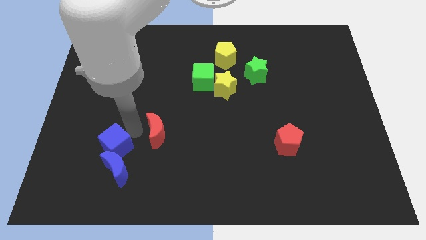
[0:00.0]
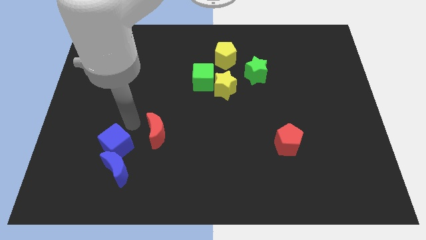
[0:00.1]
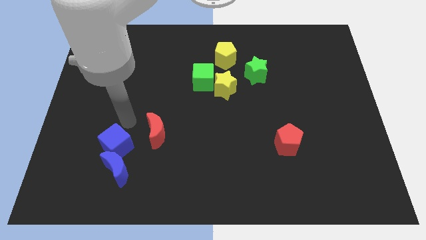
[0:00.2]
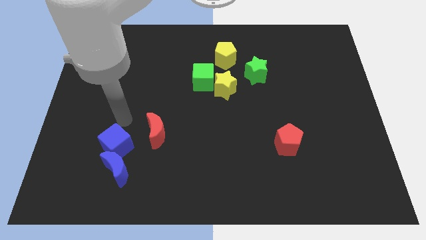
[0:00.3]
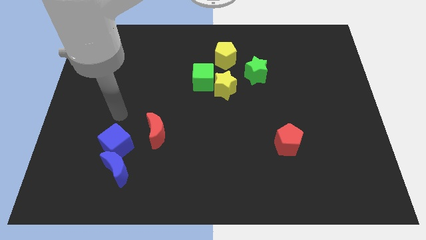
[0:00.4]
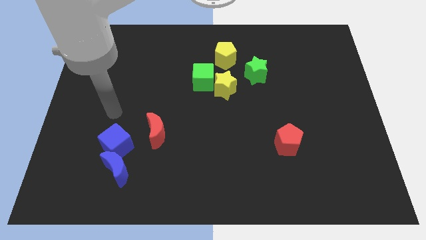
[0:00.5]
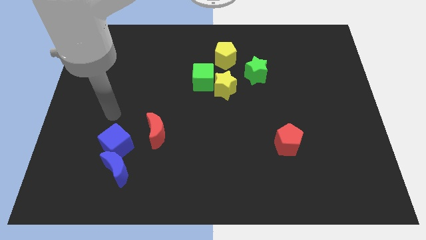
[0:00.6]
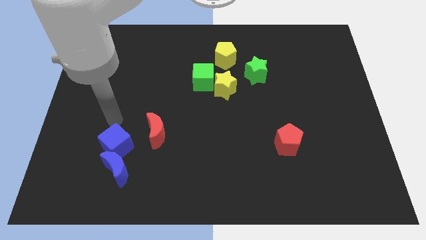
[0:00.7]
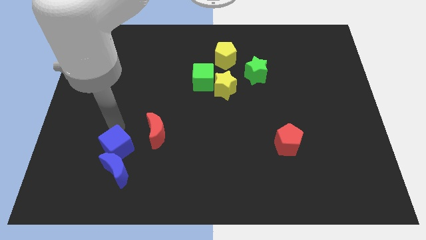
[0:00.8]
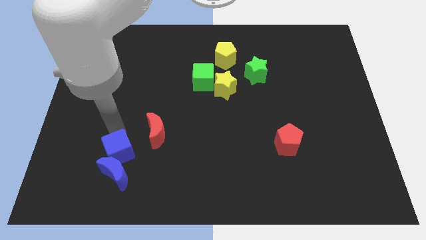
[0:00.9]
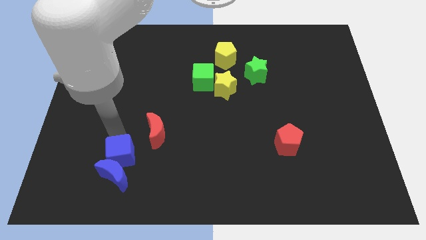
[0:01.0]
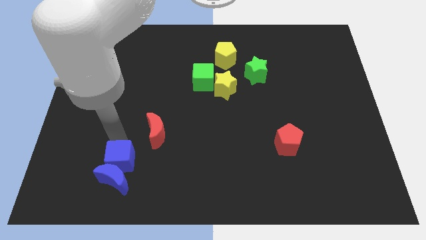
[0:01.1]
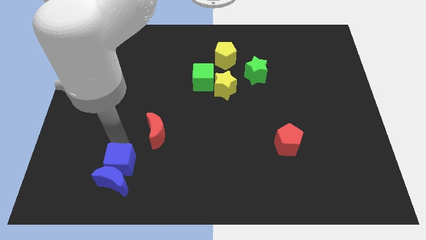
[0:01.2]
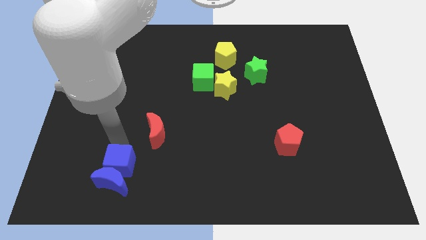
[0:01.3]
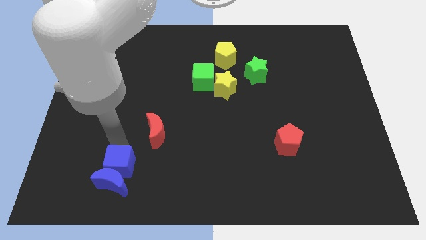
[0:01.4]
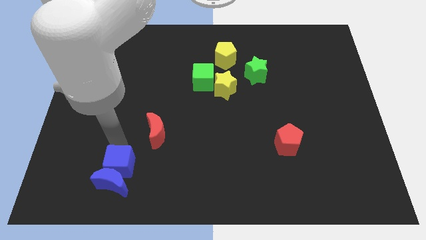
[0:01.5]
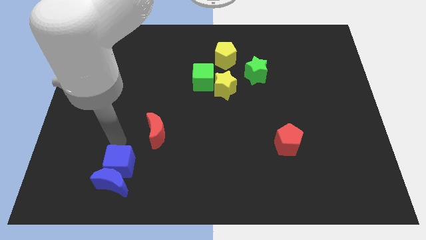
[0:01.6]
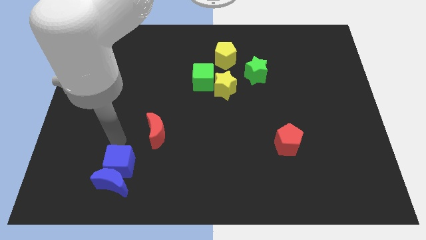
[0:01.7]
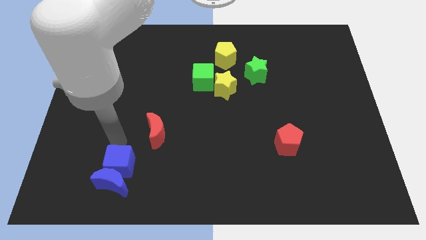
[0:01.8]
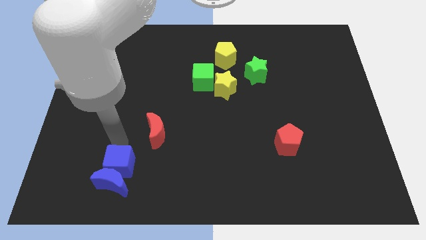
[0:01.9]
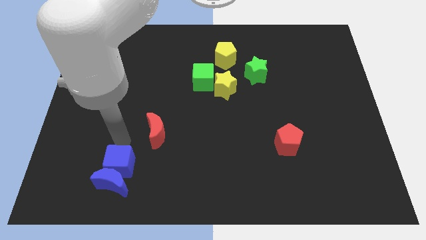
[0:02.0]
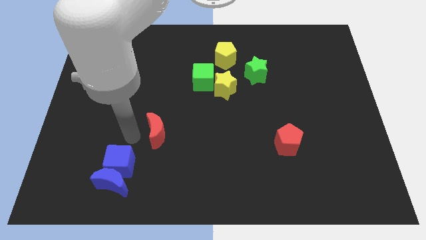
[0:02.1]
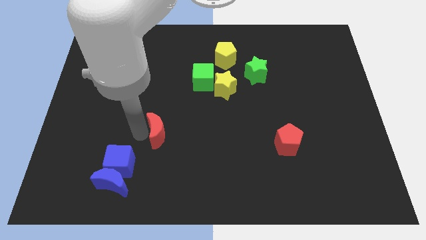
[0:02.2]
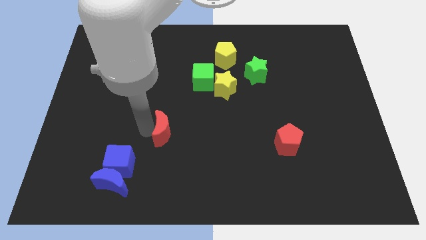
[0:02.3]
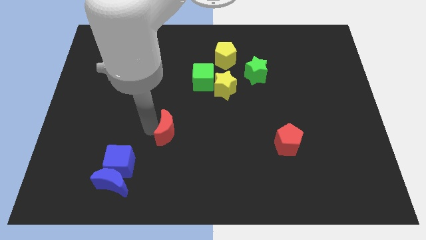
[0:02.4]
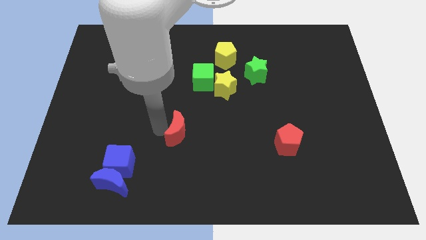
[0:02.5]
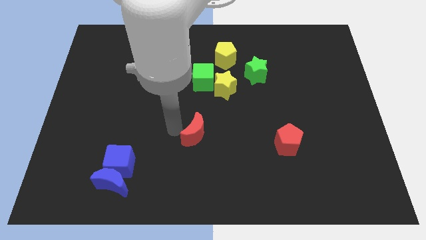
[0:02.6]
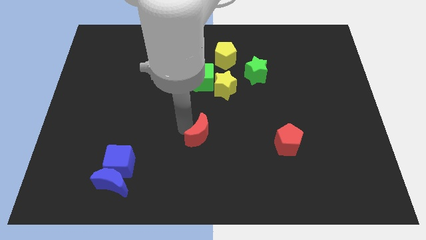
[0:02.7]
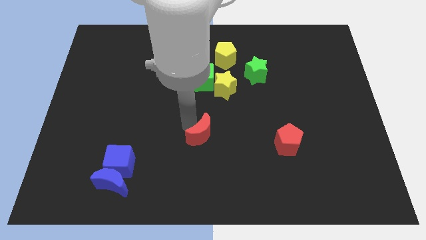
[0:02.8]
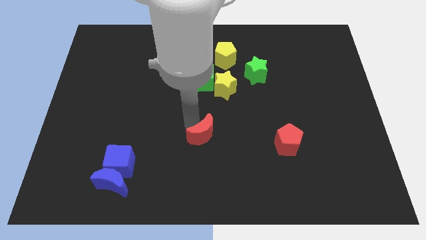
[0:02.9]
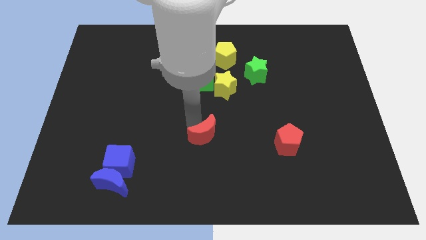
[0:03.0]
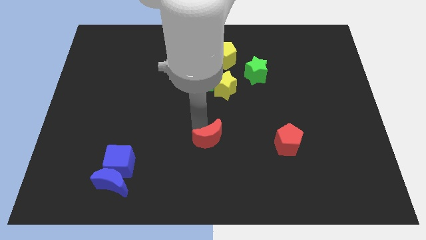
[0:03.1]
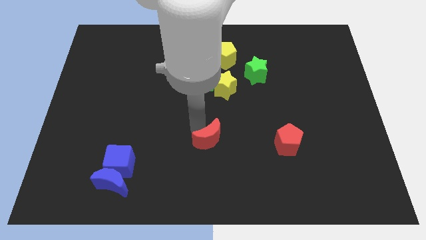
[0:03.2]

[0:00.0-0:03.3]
place the red moon below the green cube

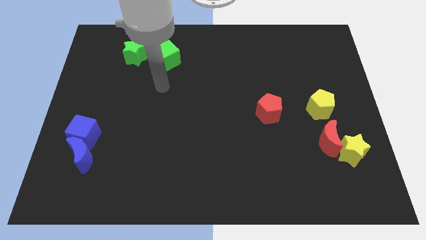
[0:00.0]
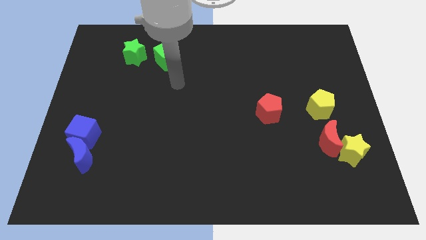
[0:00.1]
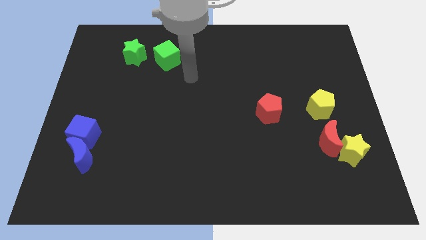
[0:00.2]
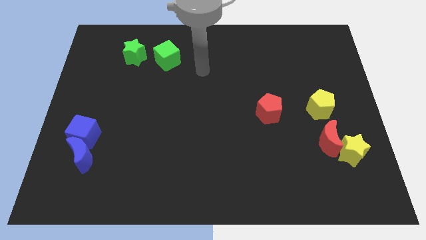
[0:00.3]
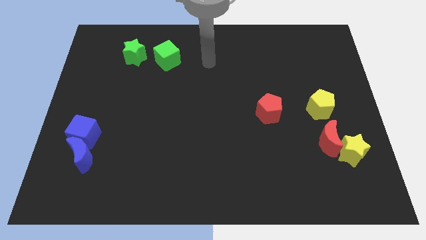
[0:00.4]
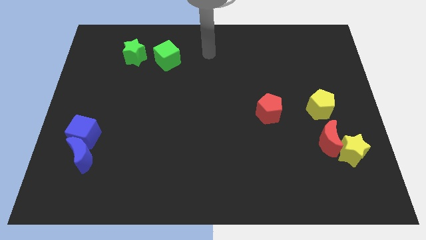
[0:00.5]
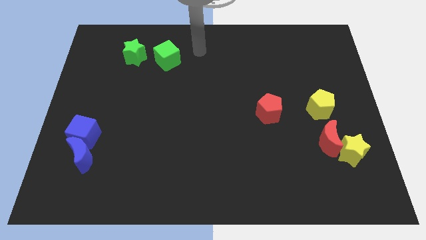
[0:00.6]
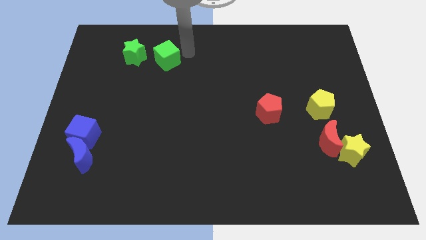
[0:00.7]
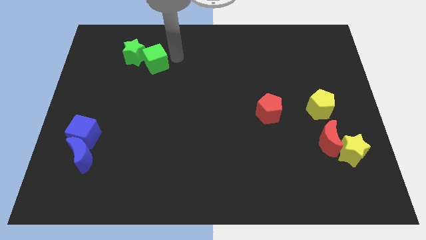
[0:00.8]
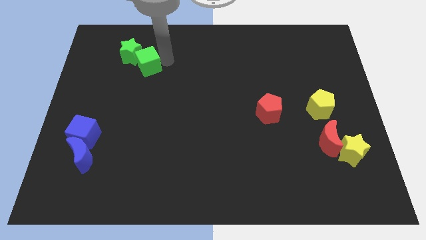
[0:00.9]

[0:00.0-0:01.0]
move green cube slightly left

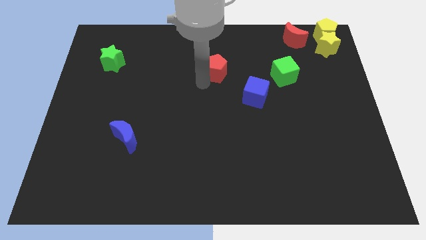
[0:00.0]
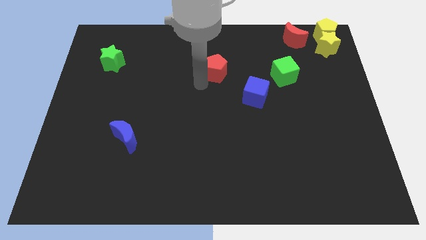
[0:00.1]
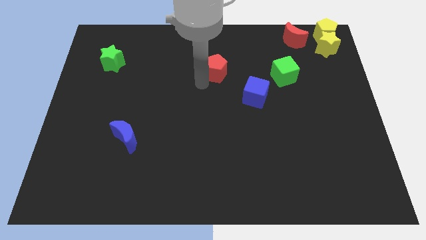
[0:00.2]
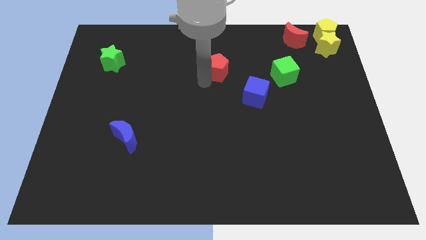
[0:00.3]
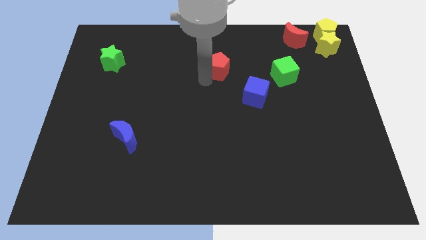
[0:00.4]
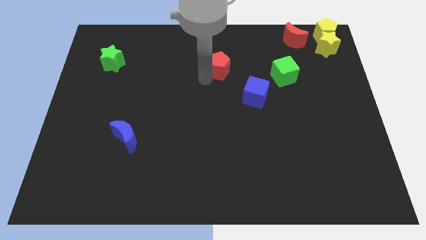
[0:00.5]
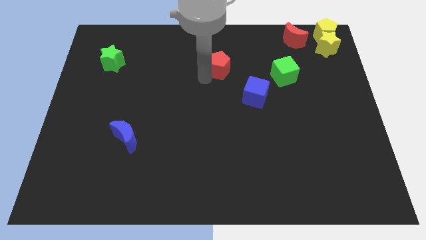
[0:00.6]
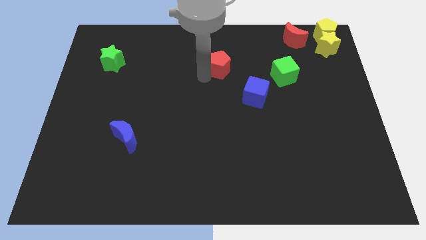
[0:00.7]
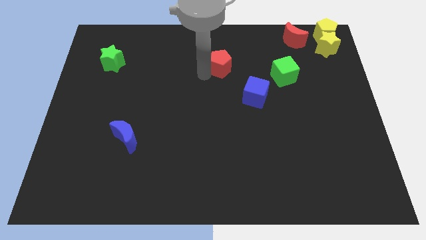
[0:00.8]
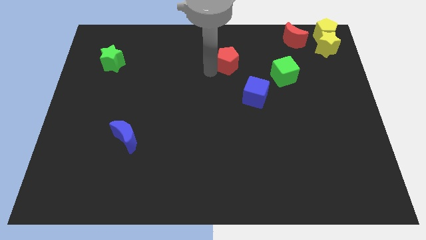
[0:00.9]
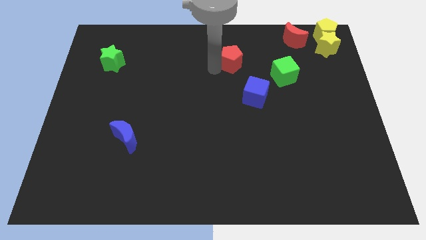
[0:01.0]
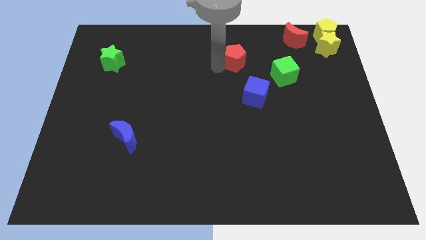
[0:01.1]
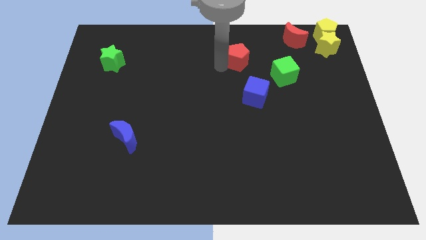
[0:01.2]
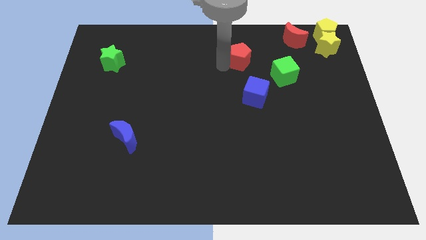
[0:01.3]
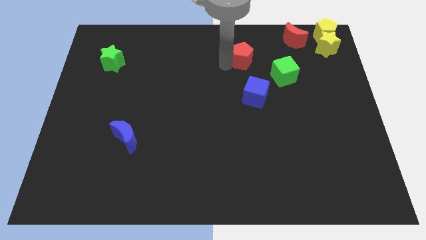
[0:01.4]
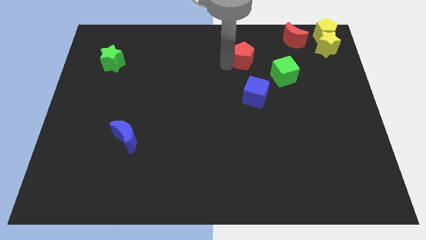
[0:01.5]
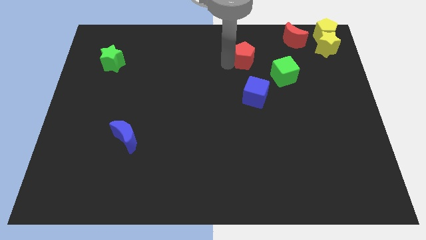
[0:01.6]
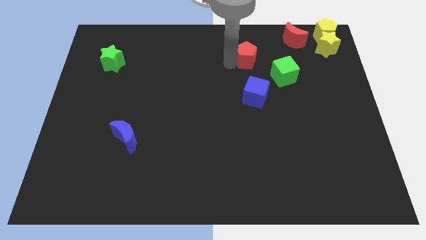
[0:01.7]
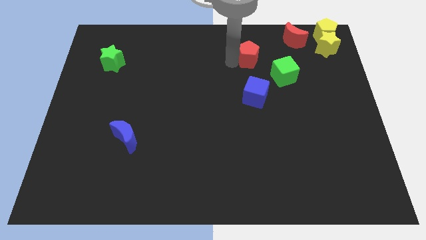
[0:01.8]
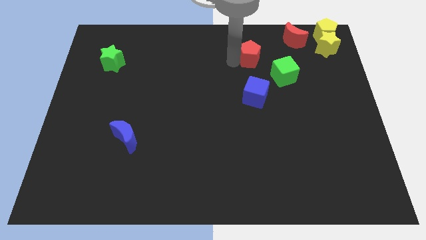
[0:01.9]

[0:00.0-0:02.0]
place the red pentagon vertically above the blue cube

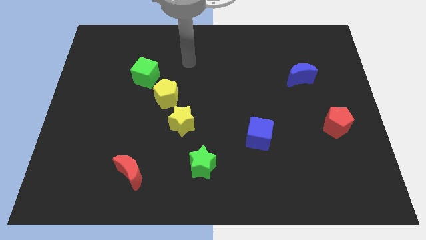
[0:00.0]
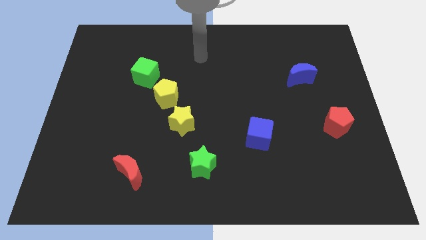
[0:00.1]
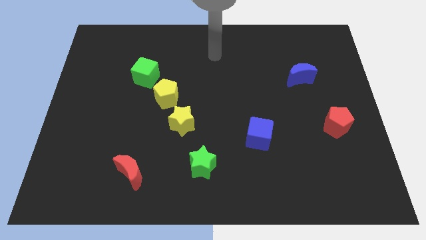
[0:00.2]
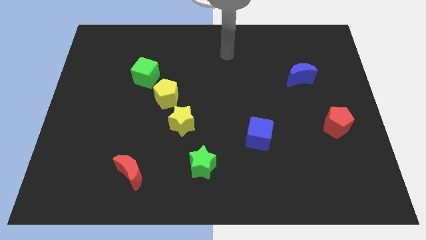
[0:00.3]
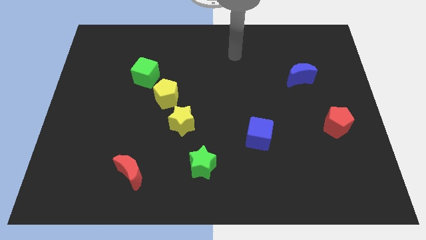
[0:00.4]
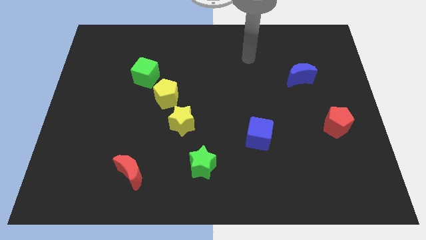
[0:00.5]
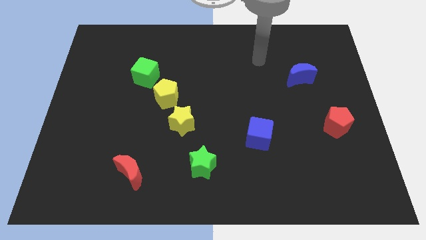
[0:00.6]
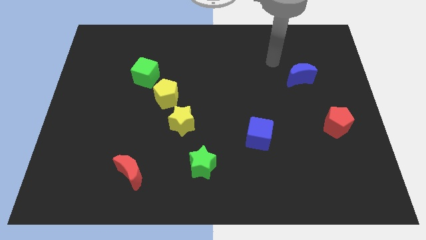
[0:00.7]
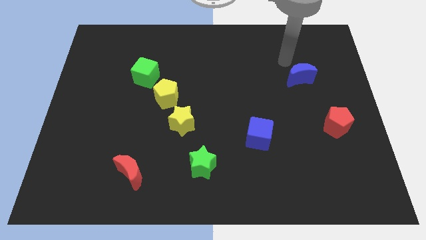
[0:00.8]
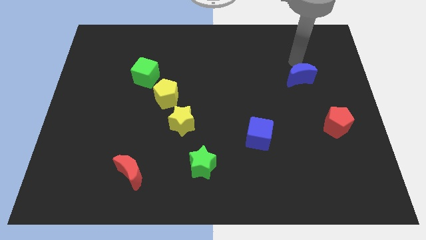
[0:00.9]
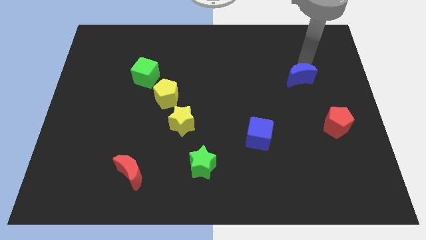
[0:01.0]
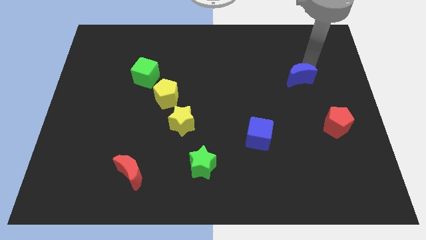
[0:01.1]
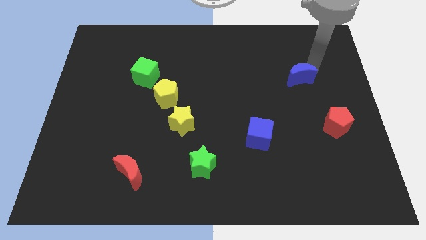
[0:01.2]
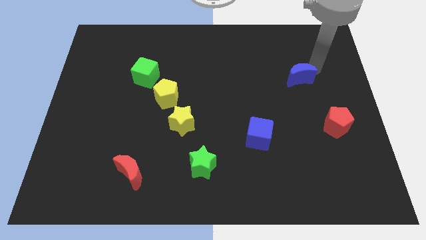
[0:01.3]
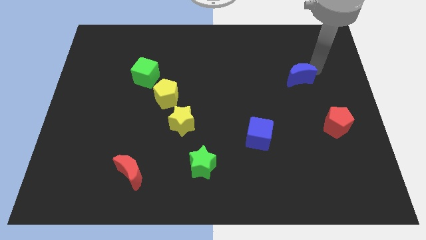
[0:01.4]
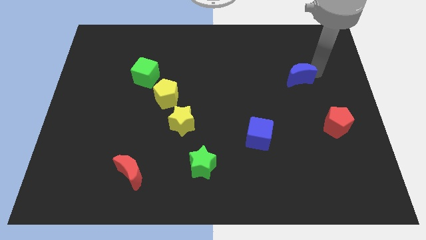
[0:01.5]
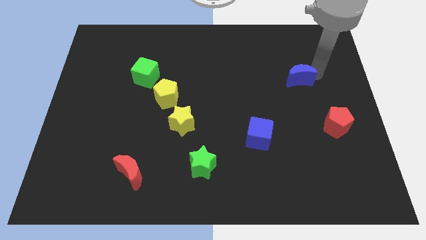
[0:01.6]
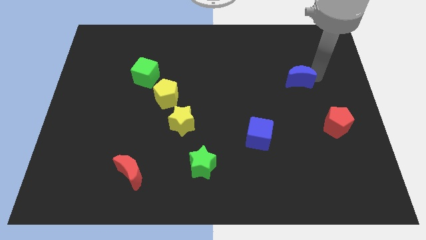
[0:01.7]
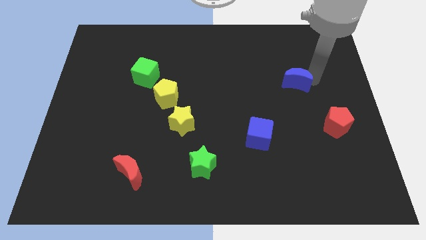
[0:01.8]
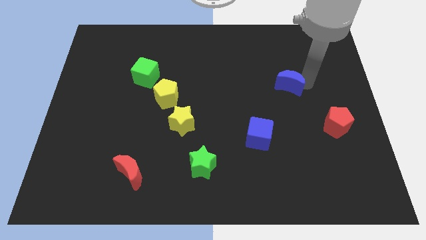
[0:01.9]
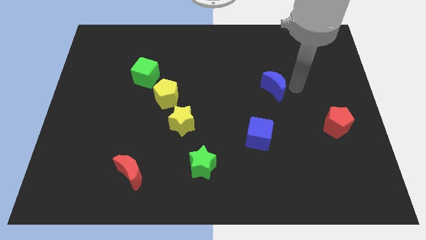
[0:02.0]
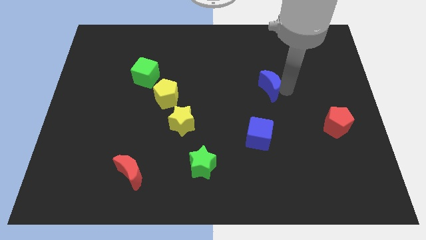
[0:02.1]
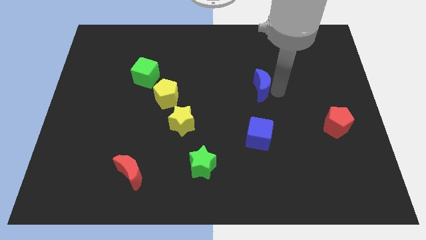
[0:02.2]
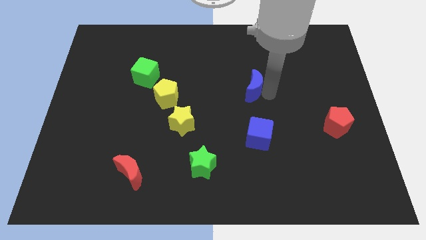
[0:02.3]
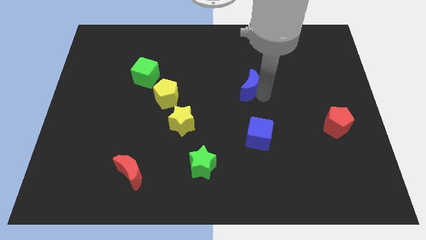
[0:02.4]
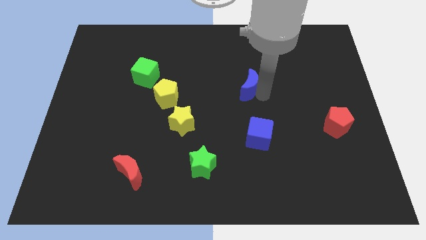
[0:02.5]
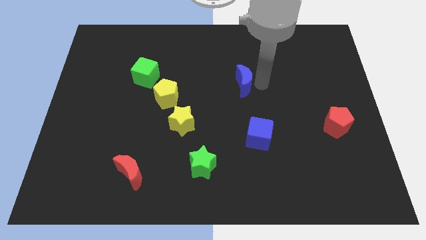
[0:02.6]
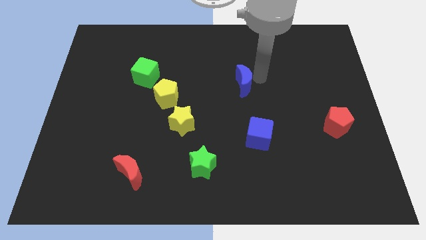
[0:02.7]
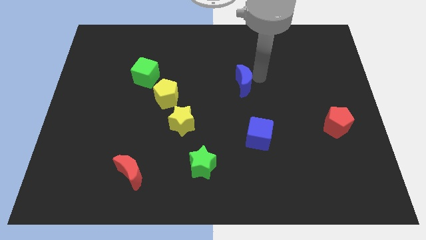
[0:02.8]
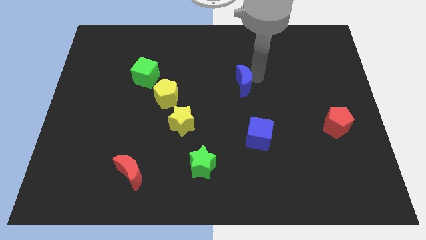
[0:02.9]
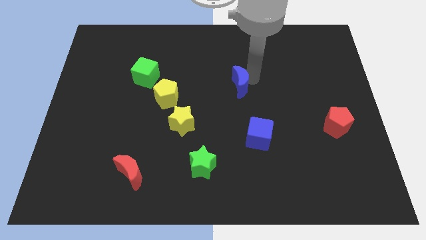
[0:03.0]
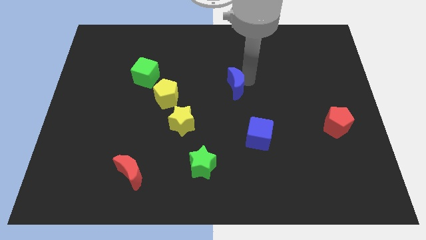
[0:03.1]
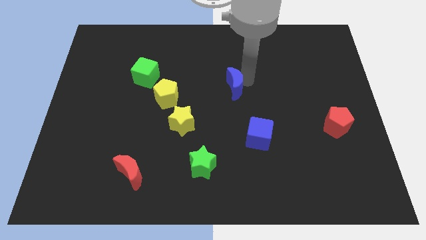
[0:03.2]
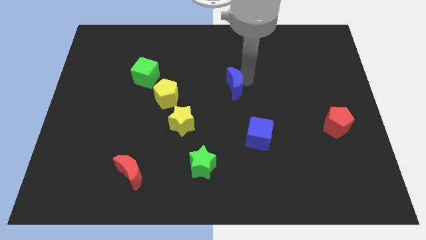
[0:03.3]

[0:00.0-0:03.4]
push the blue crescent to the top left side of the blue cube
